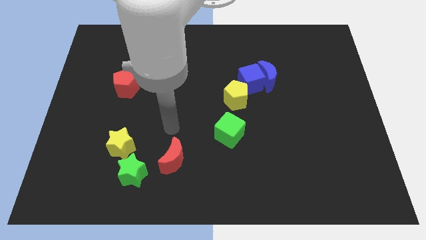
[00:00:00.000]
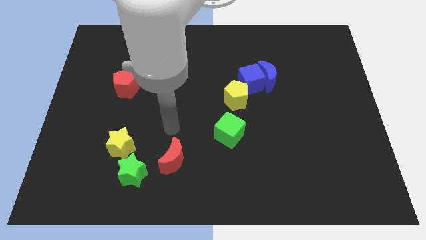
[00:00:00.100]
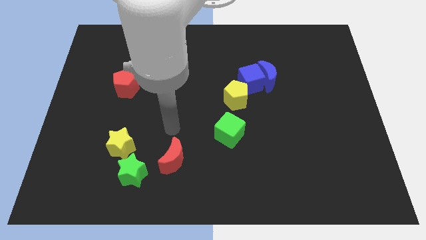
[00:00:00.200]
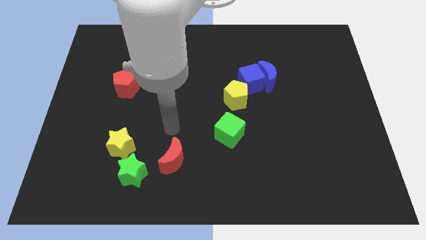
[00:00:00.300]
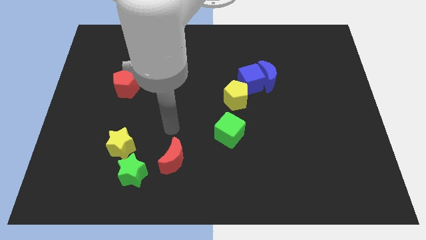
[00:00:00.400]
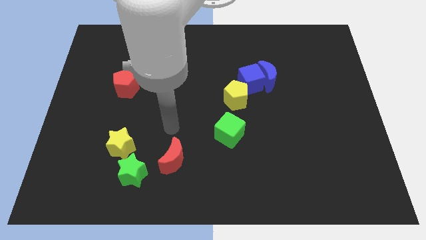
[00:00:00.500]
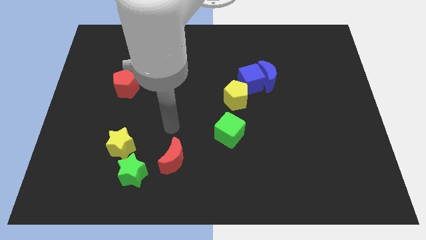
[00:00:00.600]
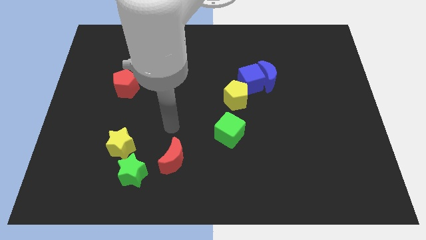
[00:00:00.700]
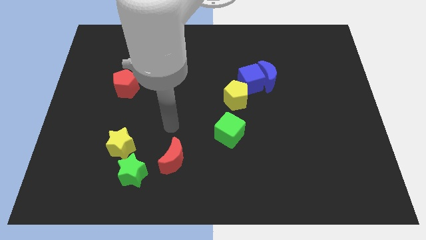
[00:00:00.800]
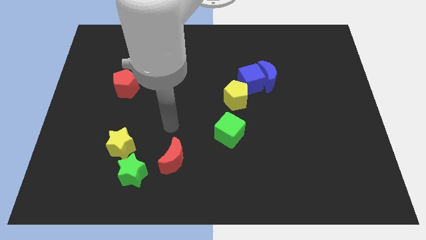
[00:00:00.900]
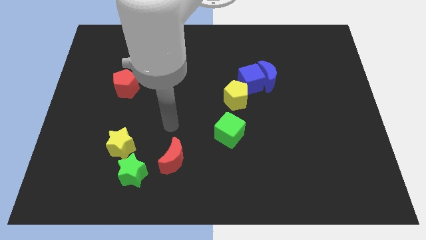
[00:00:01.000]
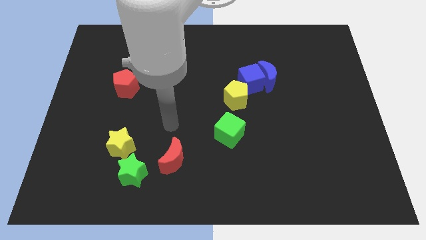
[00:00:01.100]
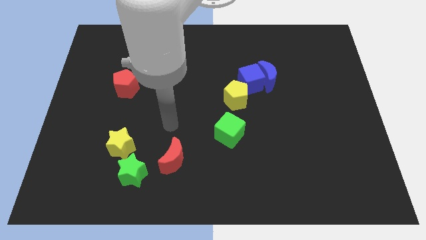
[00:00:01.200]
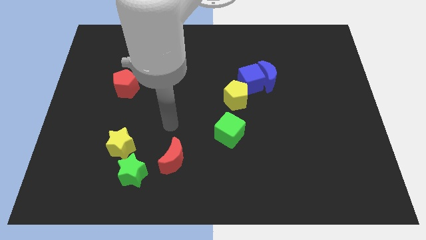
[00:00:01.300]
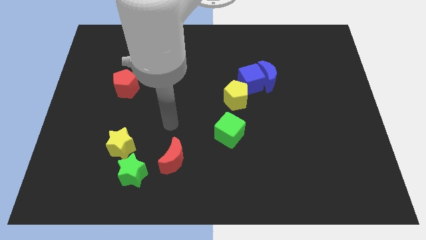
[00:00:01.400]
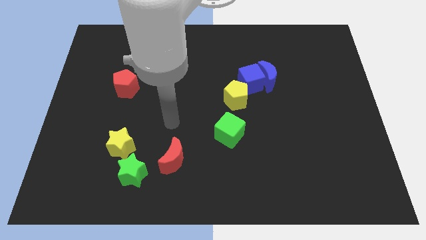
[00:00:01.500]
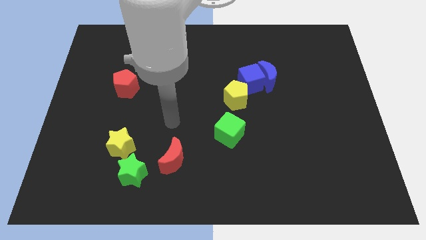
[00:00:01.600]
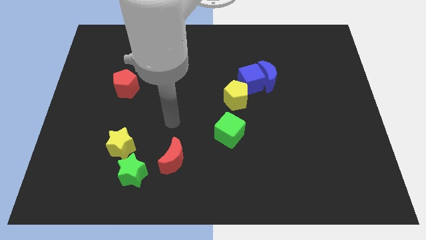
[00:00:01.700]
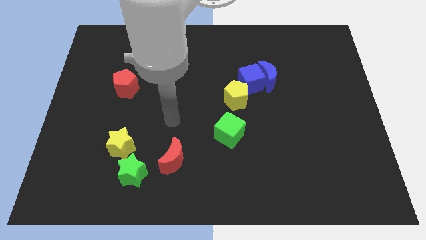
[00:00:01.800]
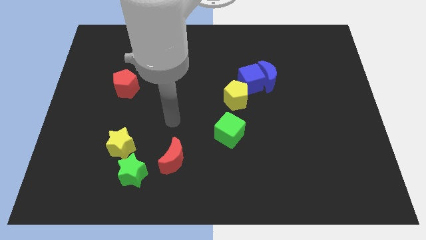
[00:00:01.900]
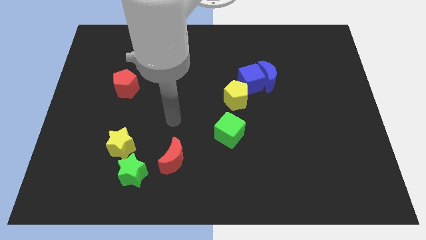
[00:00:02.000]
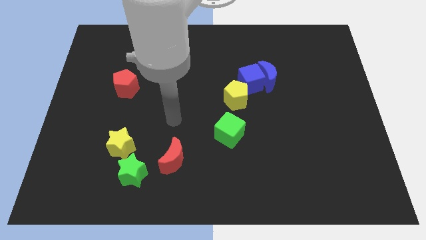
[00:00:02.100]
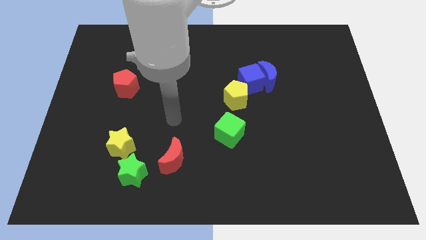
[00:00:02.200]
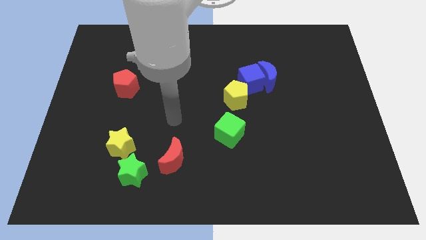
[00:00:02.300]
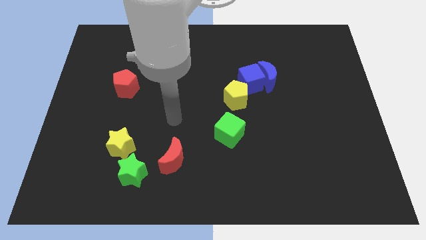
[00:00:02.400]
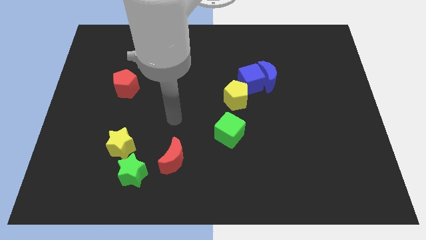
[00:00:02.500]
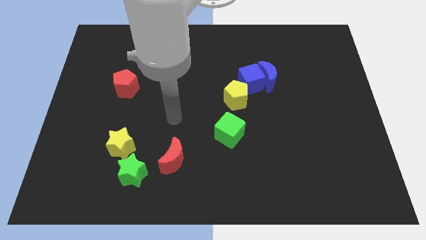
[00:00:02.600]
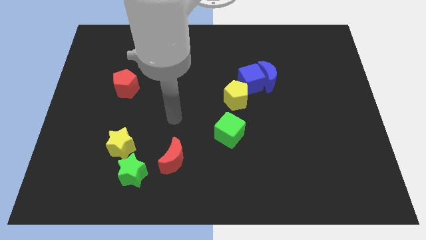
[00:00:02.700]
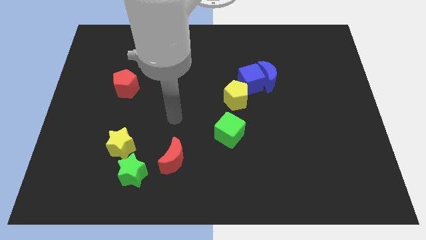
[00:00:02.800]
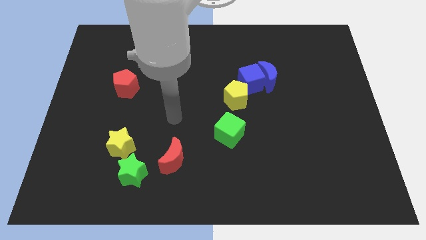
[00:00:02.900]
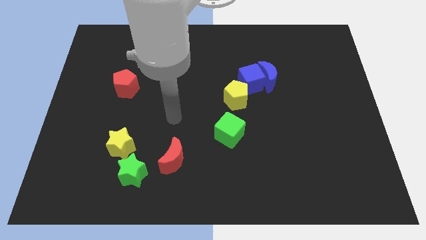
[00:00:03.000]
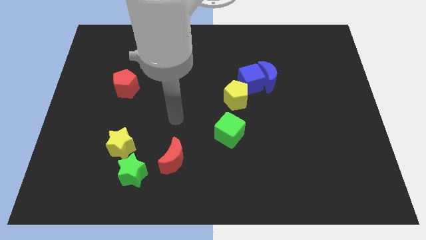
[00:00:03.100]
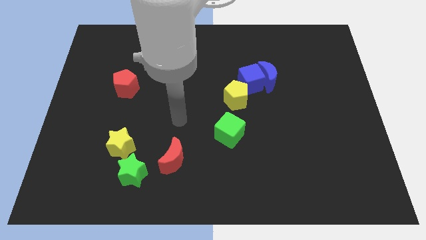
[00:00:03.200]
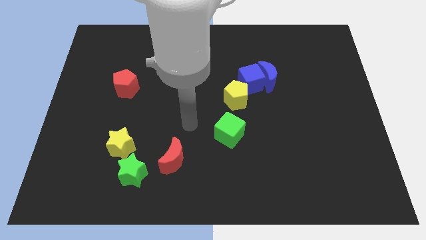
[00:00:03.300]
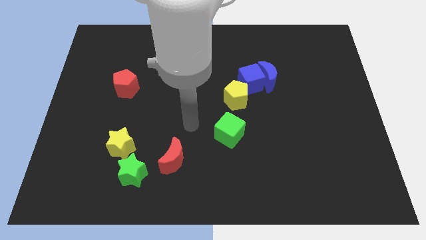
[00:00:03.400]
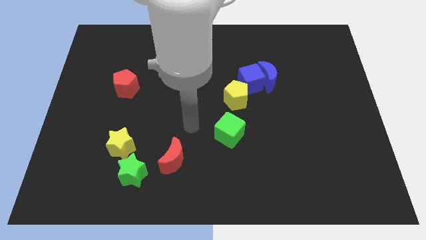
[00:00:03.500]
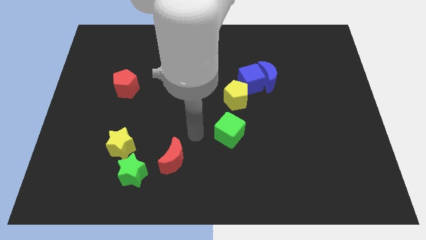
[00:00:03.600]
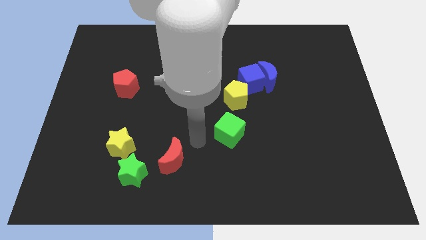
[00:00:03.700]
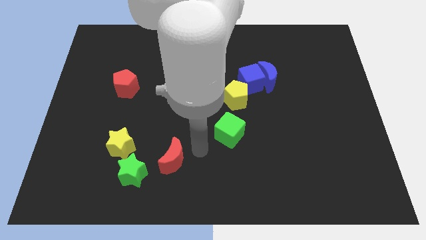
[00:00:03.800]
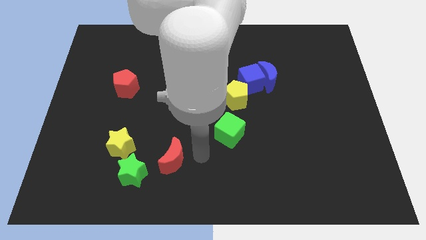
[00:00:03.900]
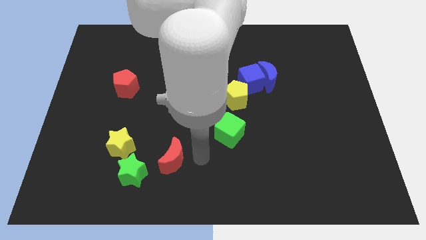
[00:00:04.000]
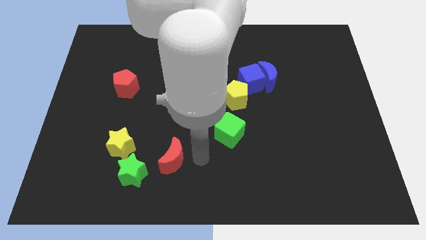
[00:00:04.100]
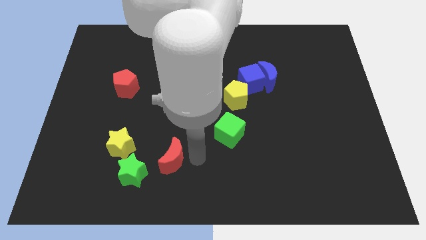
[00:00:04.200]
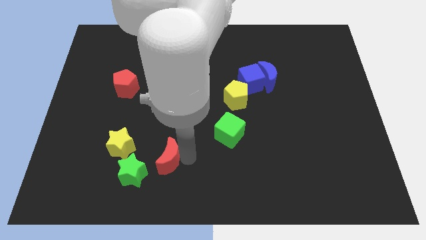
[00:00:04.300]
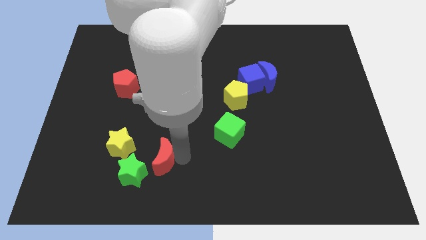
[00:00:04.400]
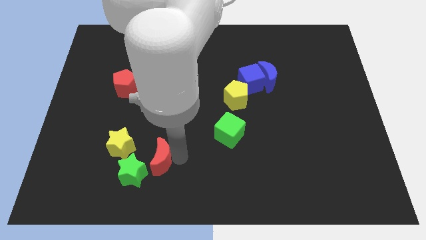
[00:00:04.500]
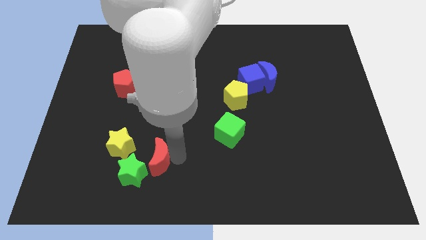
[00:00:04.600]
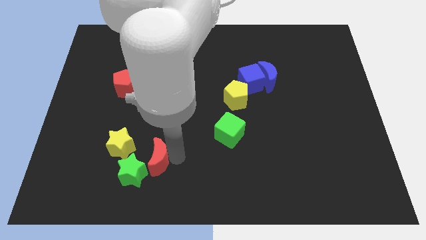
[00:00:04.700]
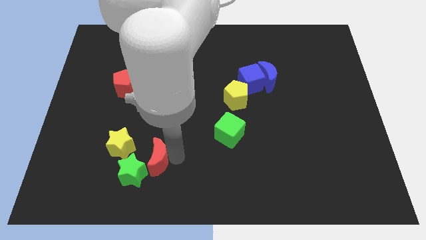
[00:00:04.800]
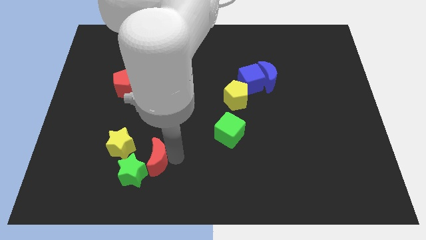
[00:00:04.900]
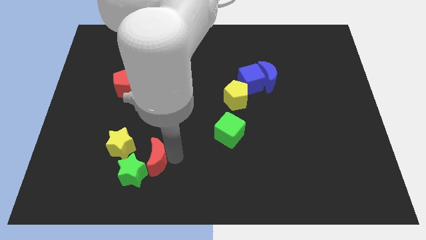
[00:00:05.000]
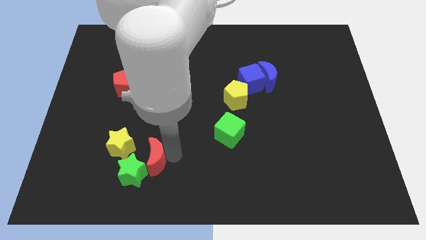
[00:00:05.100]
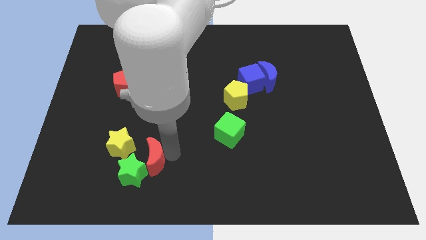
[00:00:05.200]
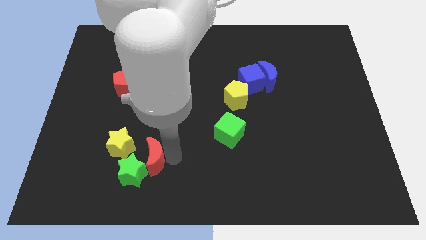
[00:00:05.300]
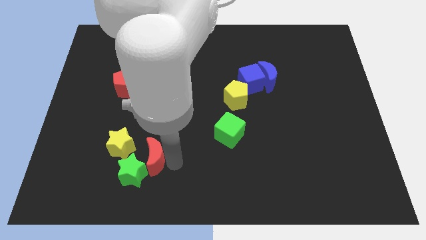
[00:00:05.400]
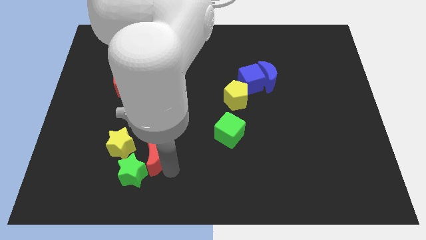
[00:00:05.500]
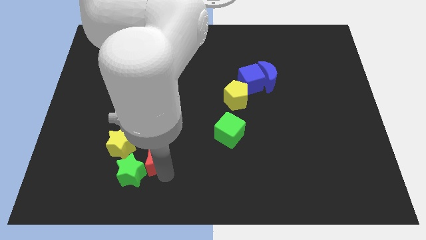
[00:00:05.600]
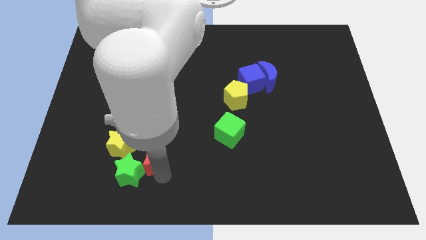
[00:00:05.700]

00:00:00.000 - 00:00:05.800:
move red moon into green star

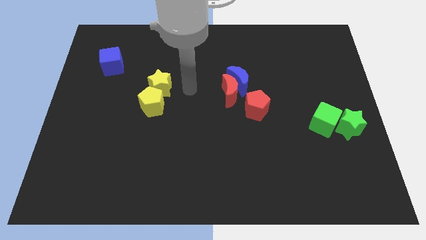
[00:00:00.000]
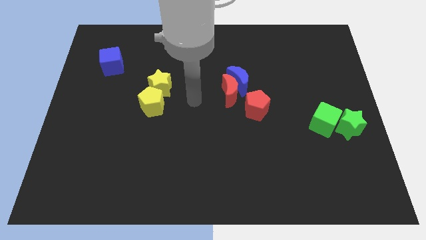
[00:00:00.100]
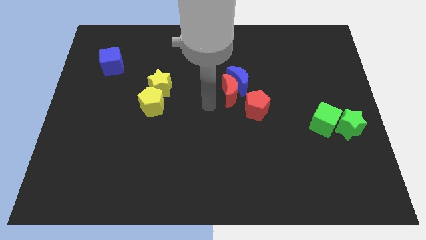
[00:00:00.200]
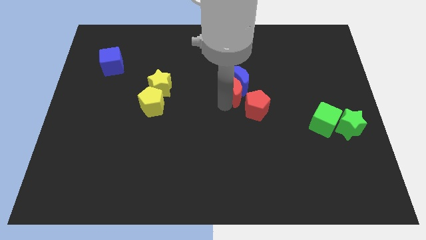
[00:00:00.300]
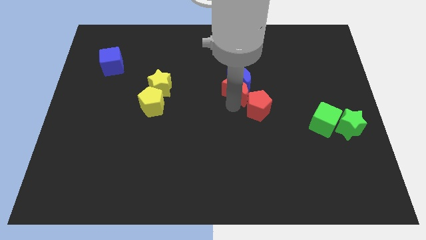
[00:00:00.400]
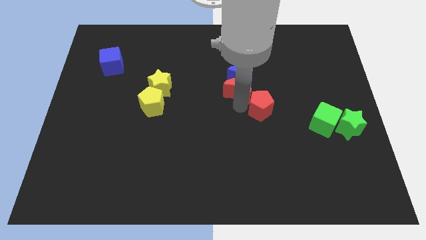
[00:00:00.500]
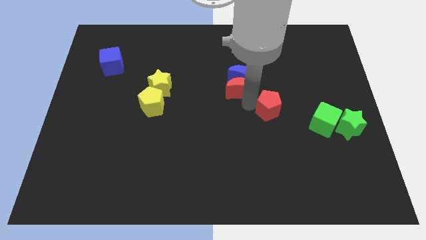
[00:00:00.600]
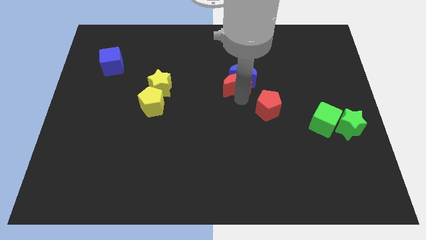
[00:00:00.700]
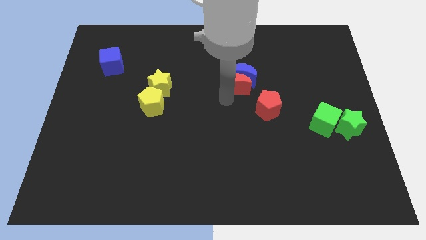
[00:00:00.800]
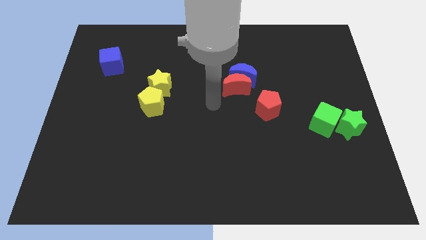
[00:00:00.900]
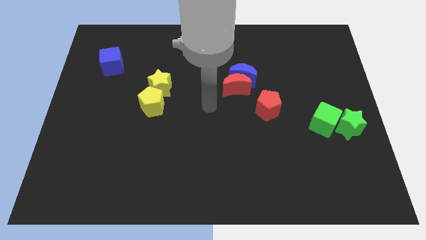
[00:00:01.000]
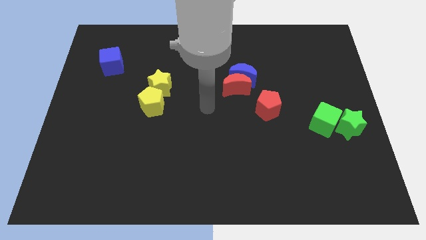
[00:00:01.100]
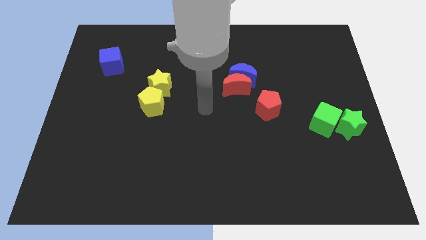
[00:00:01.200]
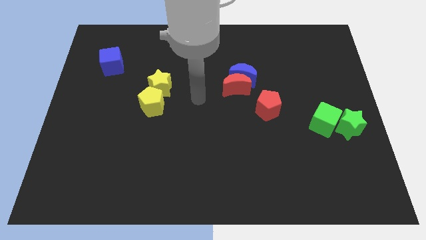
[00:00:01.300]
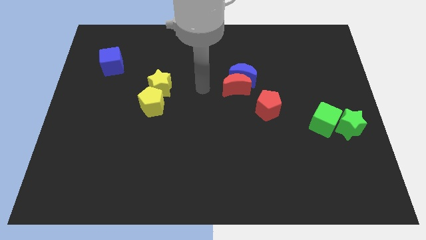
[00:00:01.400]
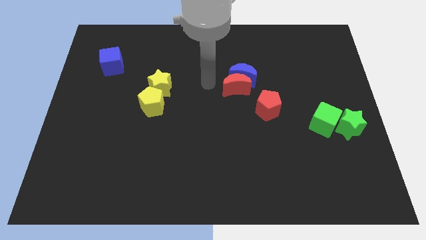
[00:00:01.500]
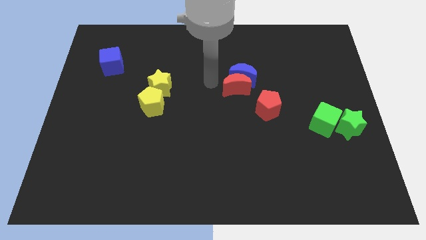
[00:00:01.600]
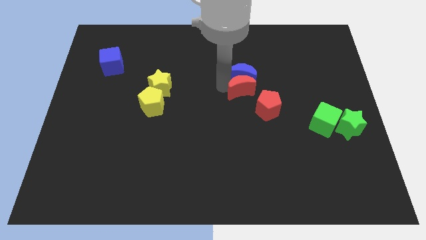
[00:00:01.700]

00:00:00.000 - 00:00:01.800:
move the red moon and blue moon slightly towards up

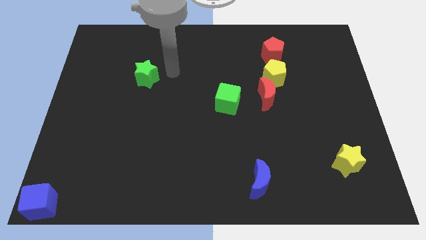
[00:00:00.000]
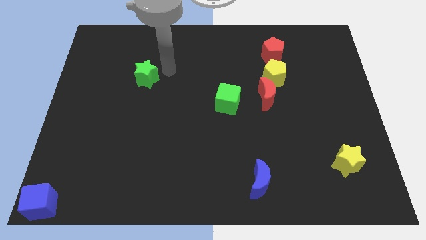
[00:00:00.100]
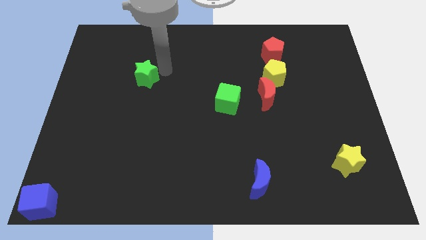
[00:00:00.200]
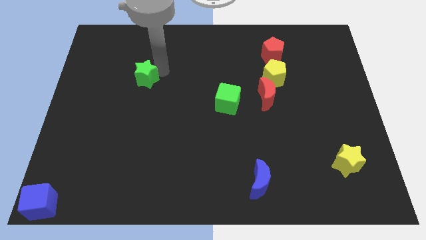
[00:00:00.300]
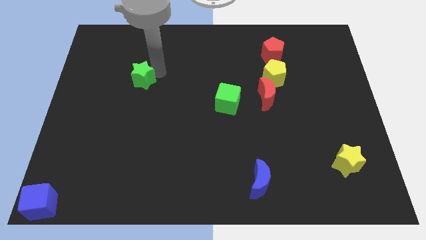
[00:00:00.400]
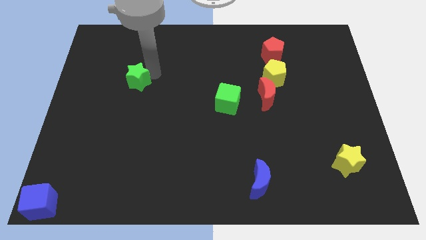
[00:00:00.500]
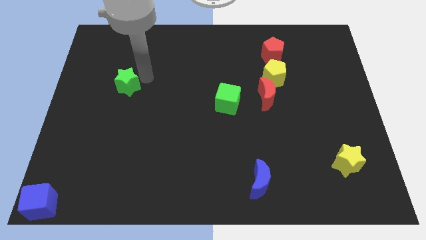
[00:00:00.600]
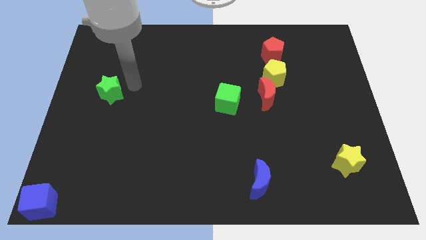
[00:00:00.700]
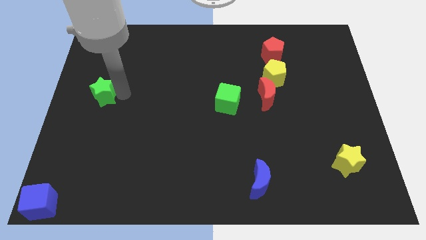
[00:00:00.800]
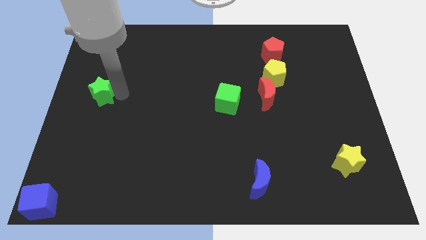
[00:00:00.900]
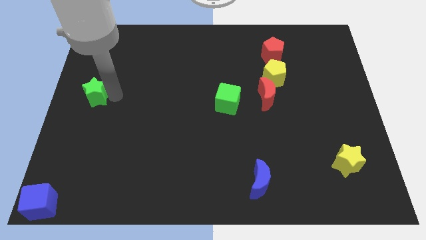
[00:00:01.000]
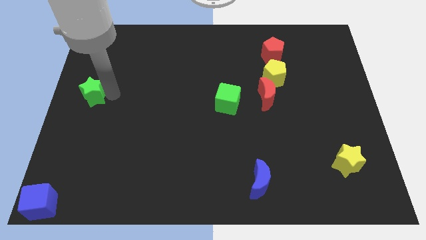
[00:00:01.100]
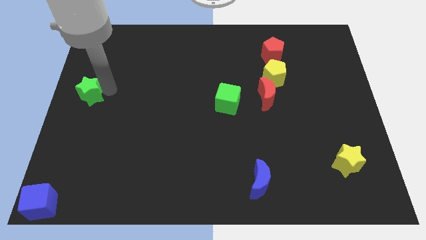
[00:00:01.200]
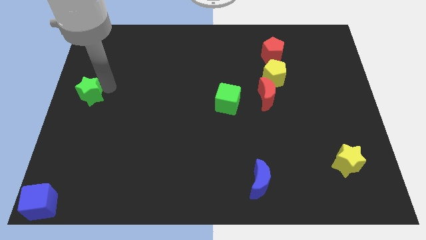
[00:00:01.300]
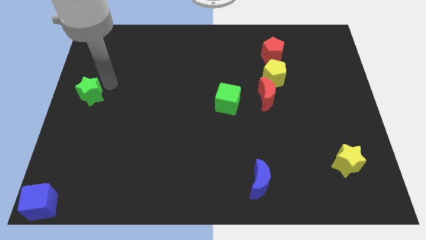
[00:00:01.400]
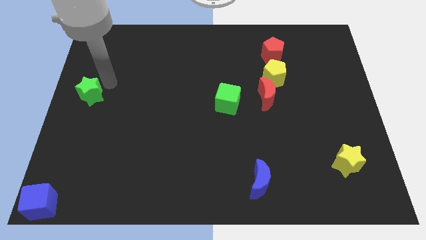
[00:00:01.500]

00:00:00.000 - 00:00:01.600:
place the green star left to the green cube
